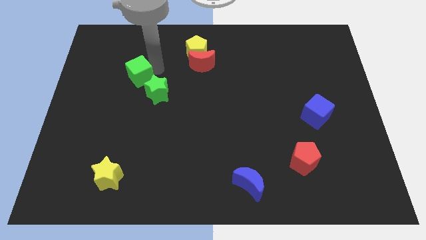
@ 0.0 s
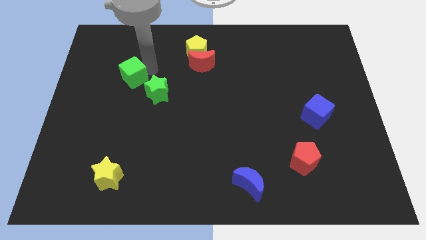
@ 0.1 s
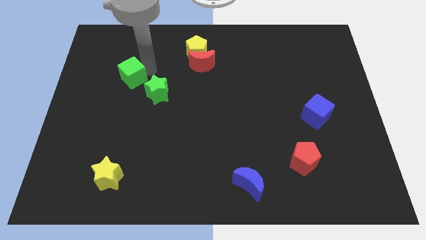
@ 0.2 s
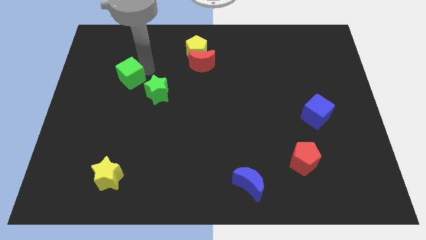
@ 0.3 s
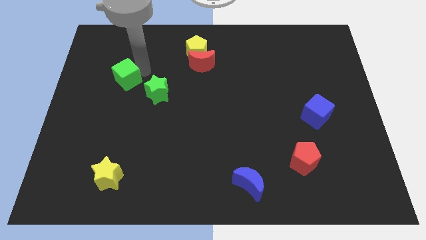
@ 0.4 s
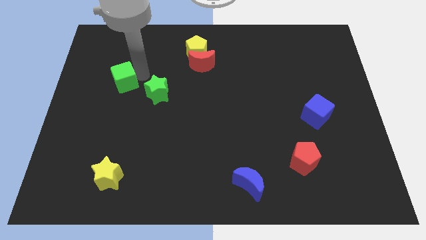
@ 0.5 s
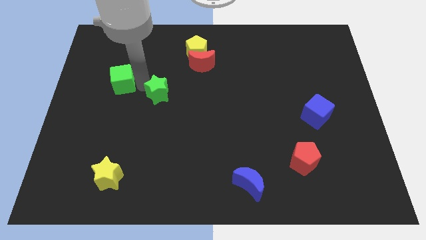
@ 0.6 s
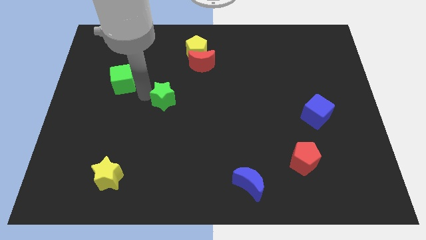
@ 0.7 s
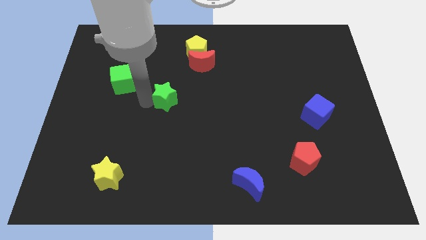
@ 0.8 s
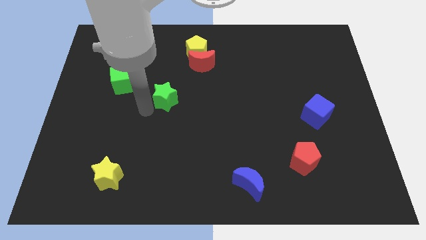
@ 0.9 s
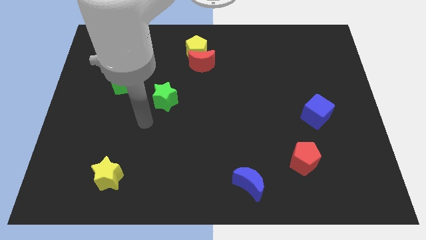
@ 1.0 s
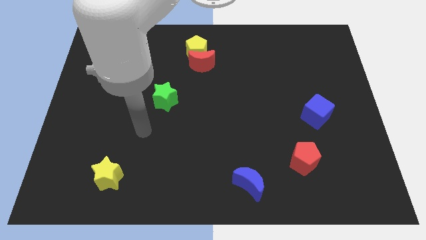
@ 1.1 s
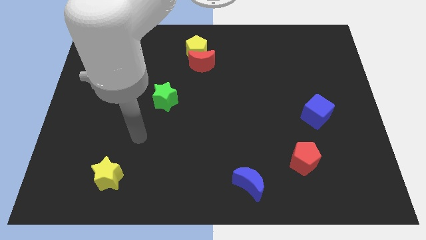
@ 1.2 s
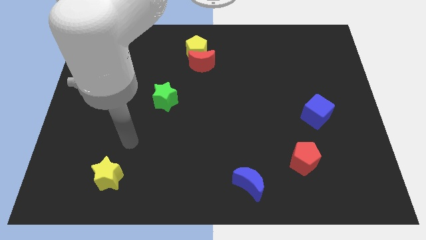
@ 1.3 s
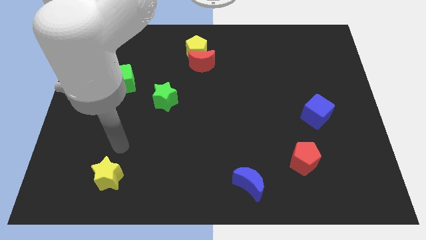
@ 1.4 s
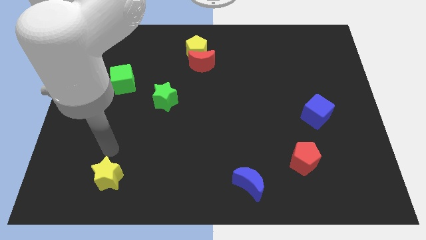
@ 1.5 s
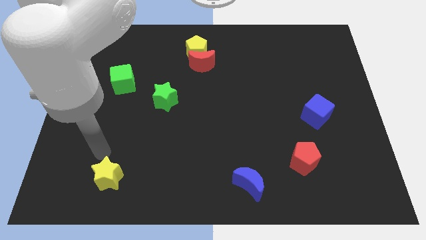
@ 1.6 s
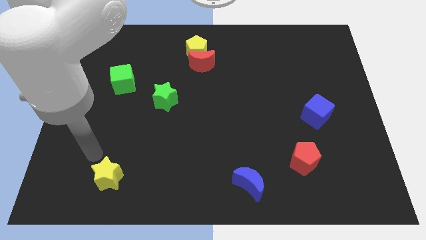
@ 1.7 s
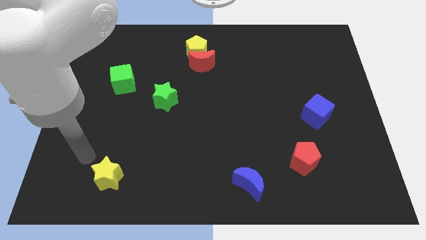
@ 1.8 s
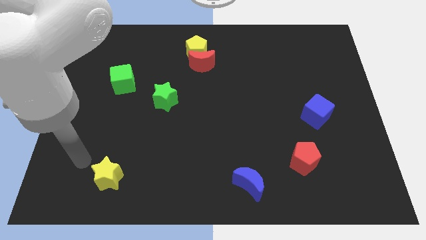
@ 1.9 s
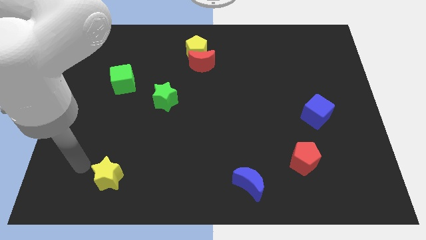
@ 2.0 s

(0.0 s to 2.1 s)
slide the green cube diagonally to the green star

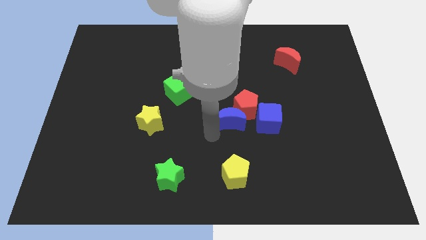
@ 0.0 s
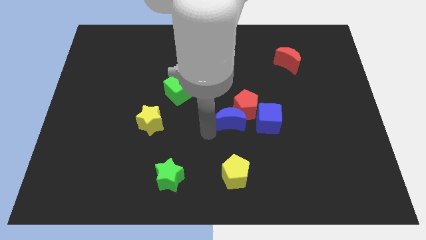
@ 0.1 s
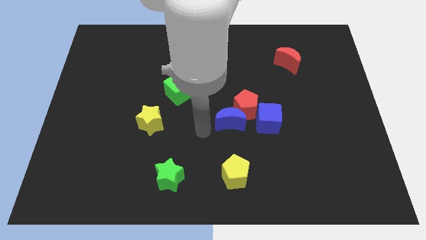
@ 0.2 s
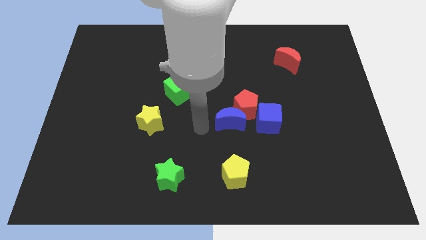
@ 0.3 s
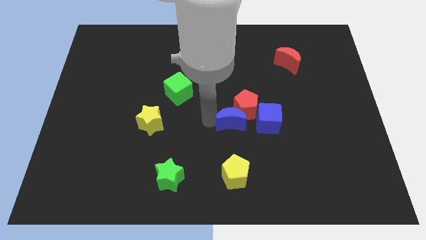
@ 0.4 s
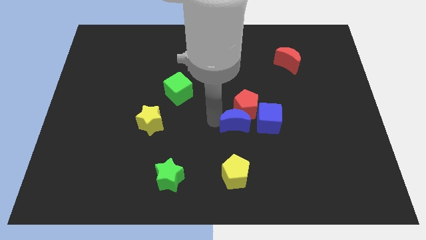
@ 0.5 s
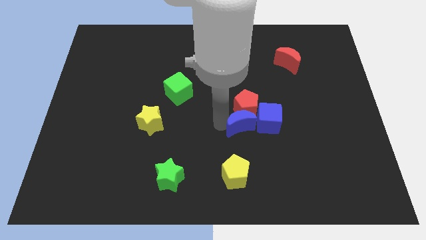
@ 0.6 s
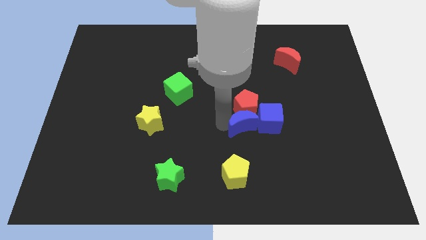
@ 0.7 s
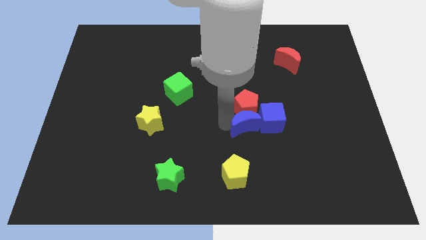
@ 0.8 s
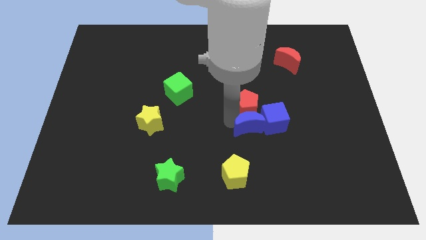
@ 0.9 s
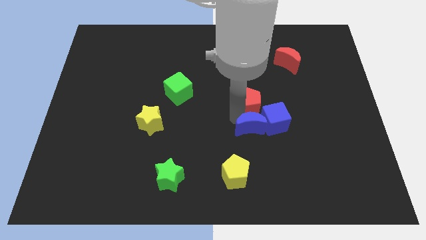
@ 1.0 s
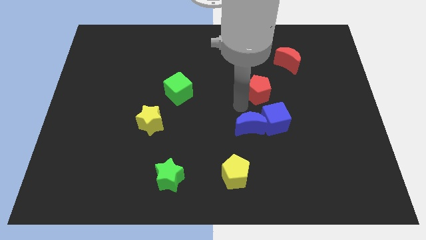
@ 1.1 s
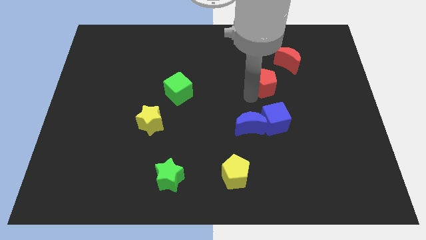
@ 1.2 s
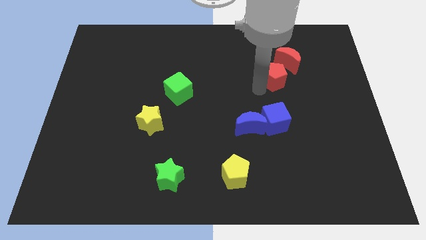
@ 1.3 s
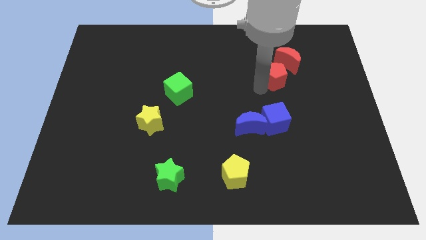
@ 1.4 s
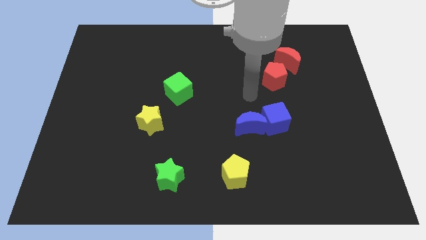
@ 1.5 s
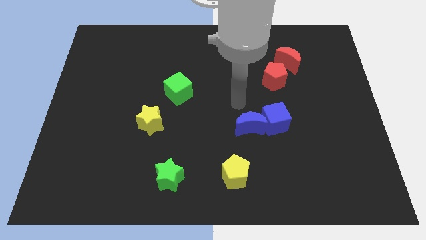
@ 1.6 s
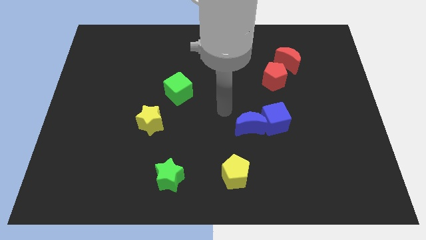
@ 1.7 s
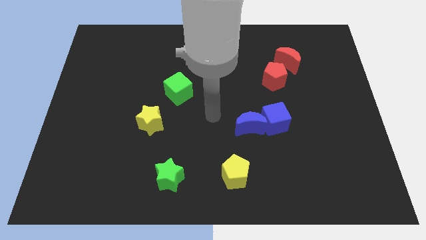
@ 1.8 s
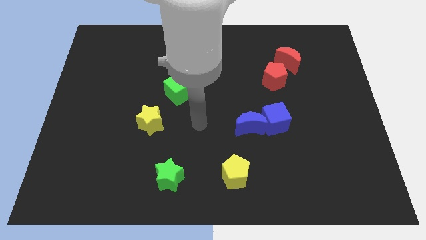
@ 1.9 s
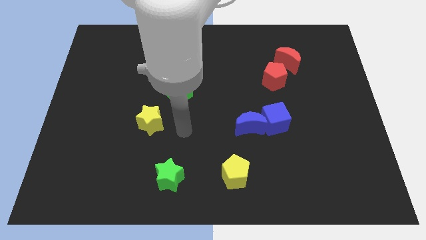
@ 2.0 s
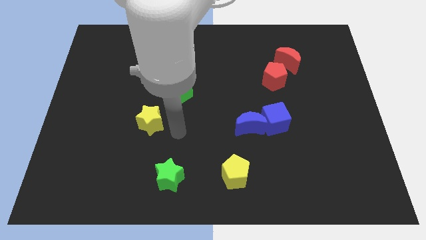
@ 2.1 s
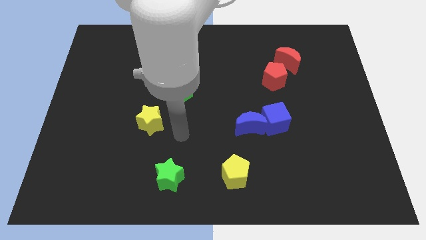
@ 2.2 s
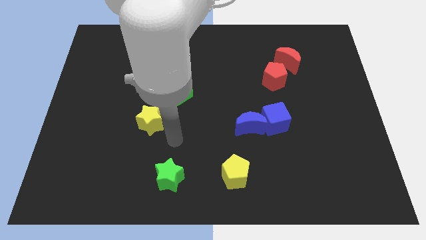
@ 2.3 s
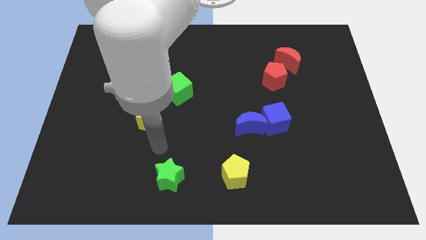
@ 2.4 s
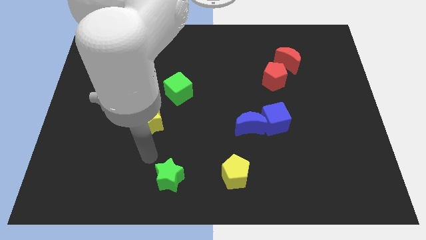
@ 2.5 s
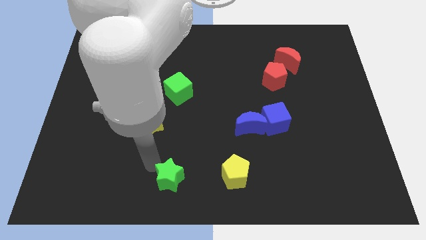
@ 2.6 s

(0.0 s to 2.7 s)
push the red pentagon to the left of the red crescent

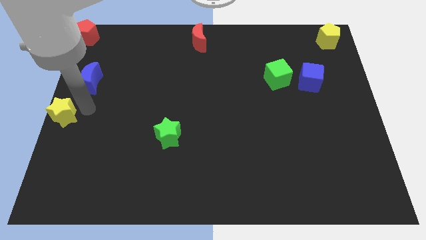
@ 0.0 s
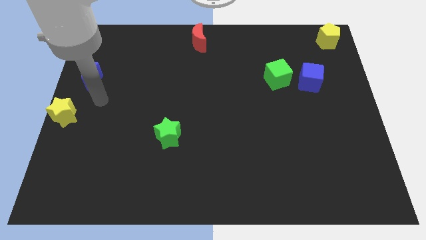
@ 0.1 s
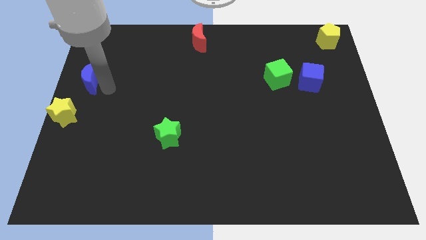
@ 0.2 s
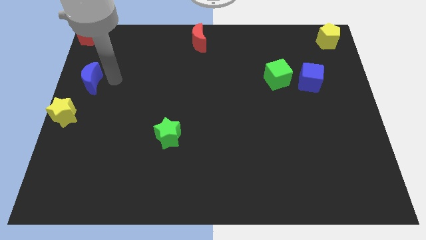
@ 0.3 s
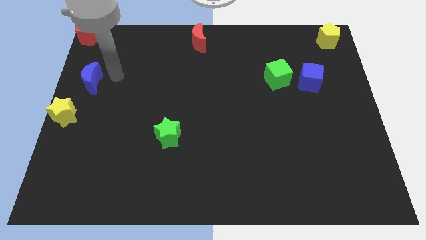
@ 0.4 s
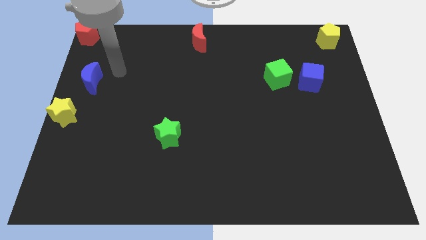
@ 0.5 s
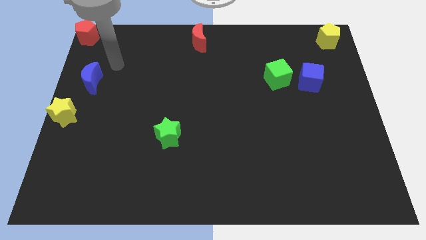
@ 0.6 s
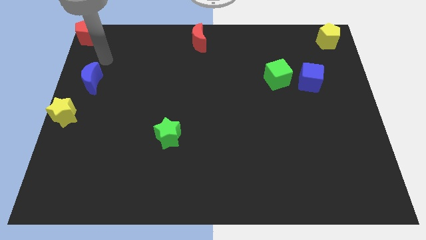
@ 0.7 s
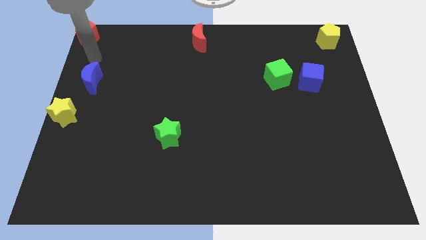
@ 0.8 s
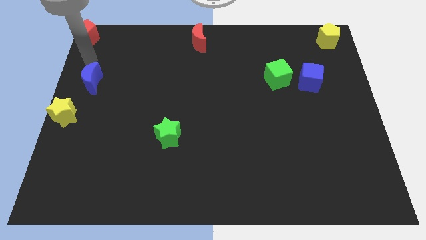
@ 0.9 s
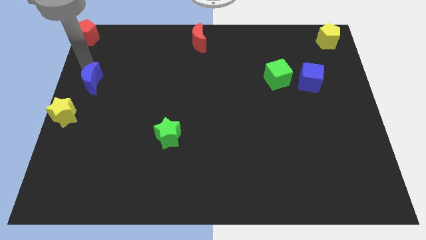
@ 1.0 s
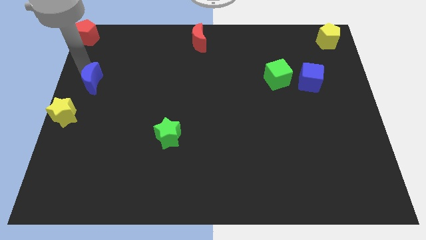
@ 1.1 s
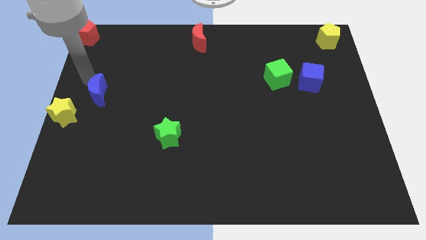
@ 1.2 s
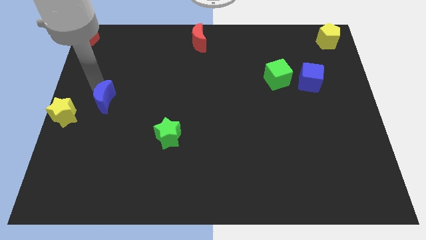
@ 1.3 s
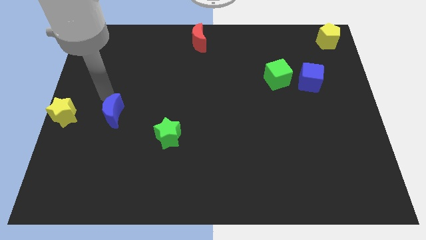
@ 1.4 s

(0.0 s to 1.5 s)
move the blue crescent to the right of the yellow star

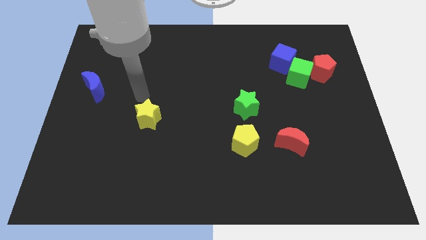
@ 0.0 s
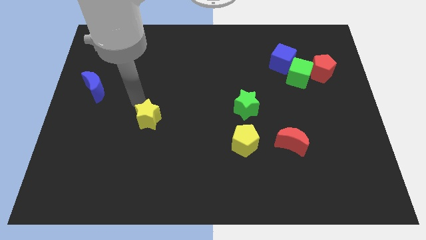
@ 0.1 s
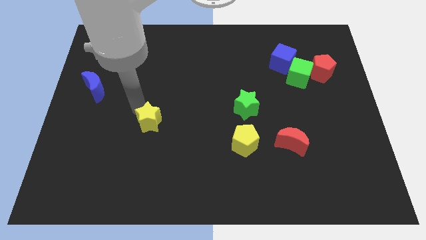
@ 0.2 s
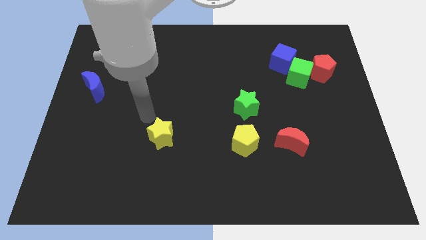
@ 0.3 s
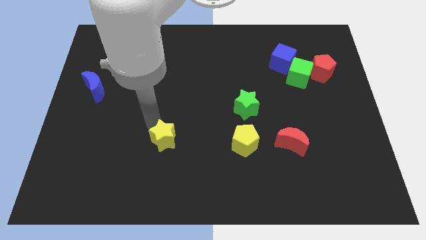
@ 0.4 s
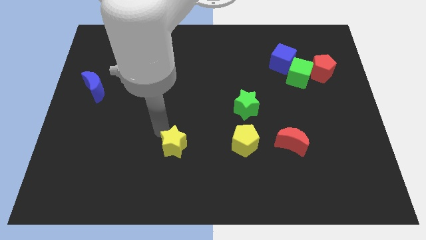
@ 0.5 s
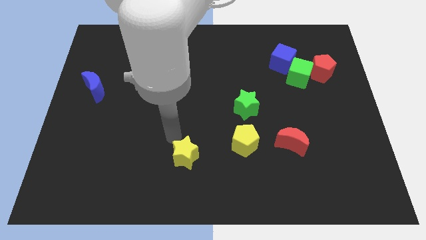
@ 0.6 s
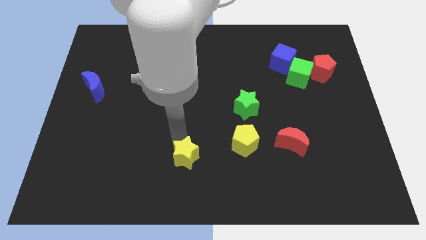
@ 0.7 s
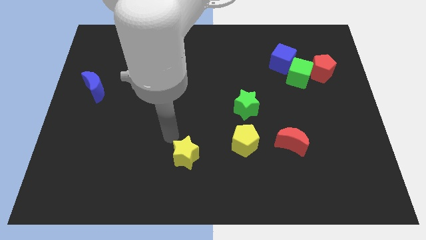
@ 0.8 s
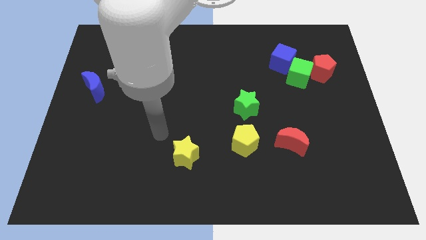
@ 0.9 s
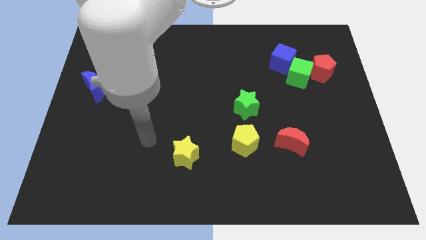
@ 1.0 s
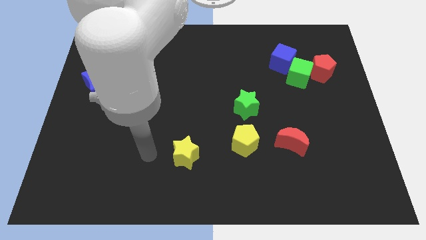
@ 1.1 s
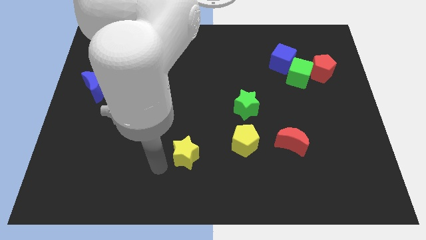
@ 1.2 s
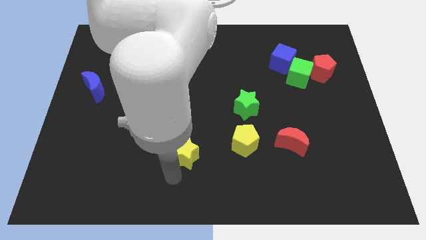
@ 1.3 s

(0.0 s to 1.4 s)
push the yellow star towards the bottom center of the board

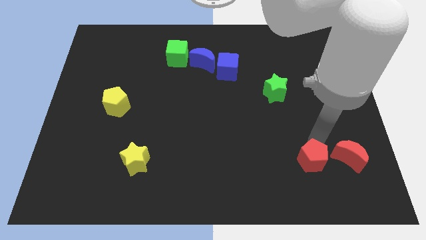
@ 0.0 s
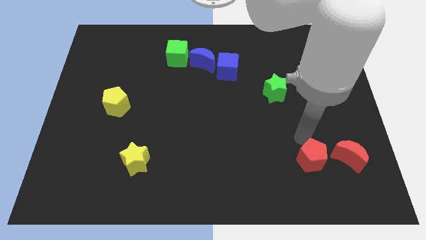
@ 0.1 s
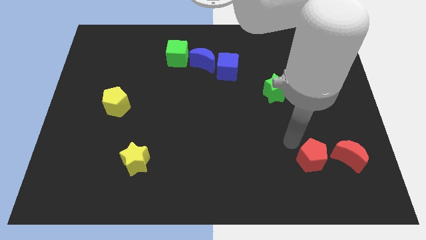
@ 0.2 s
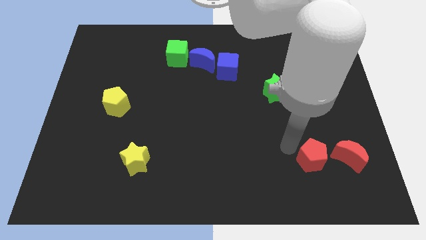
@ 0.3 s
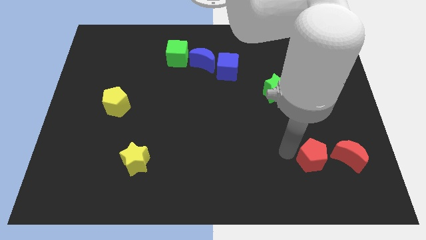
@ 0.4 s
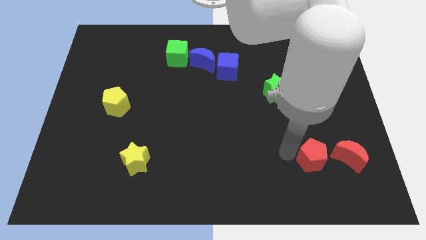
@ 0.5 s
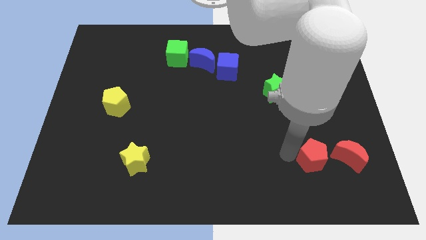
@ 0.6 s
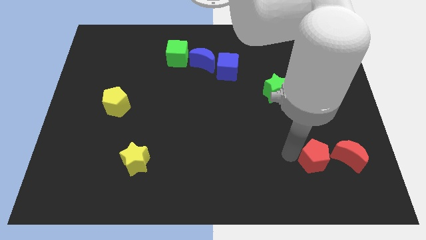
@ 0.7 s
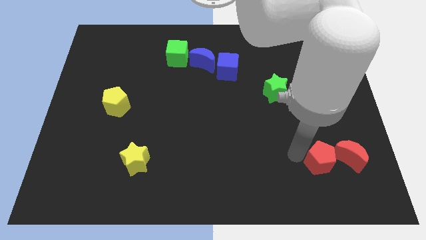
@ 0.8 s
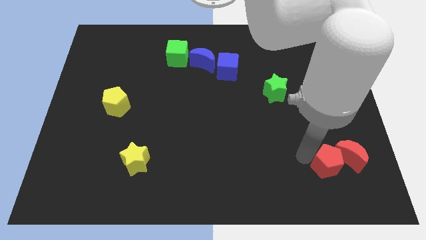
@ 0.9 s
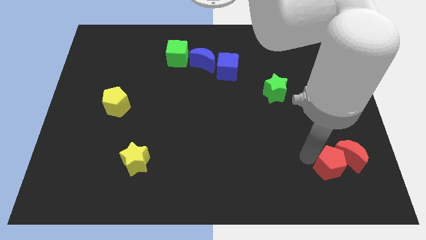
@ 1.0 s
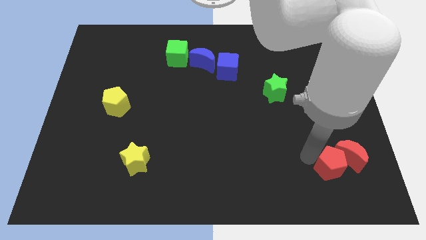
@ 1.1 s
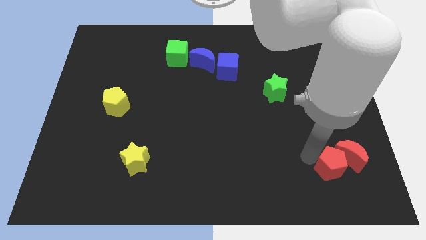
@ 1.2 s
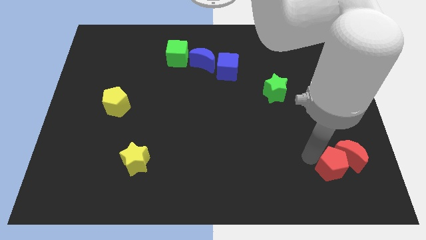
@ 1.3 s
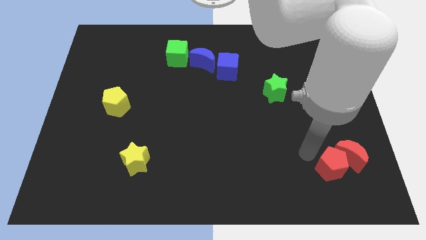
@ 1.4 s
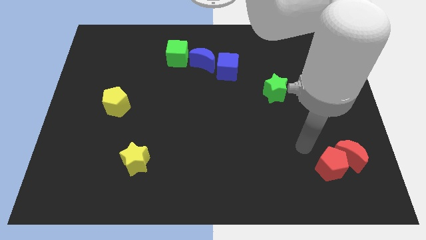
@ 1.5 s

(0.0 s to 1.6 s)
move red pentagon close to red crescent
